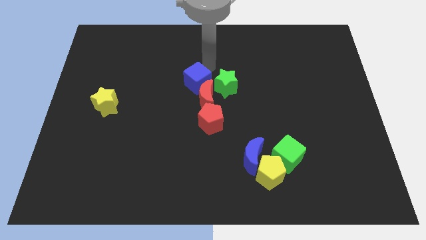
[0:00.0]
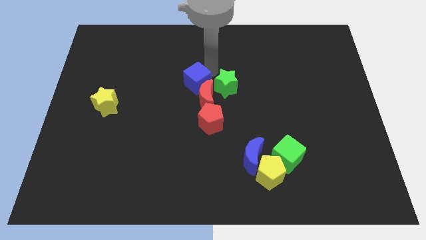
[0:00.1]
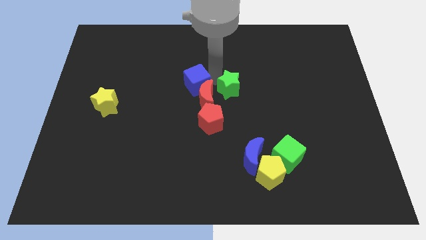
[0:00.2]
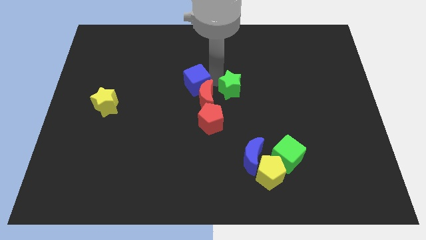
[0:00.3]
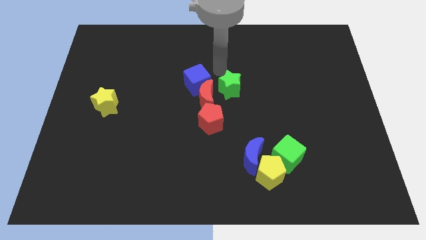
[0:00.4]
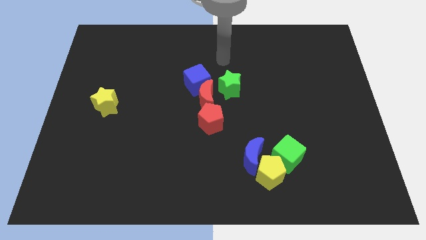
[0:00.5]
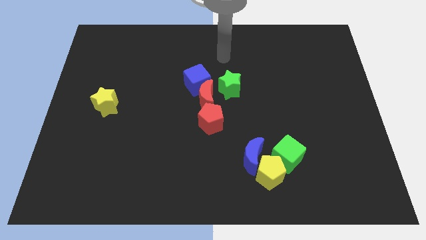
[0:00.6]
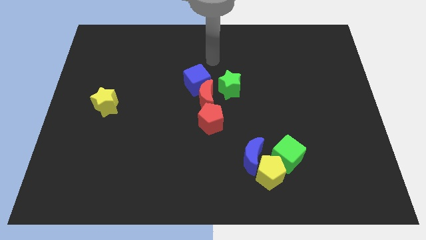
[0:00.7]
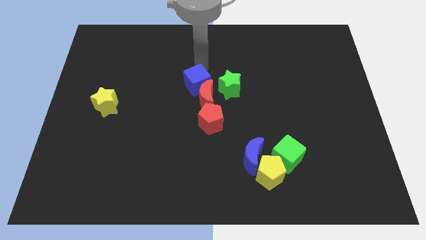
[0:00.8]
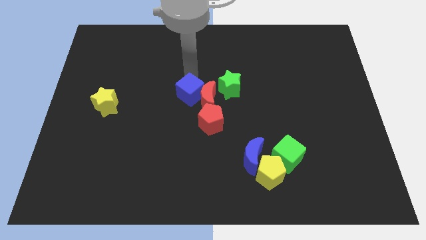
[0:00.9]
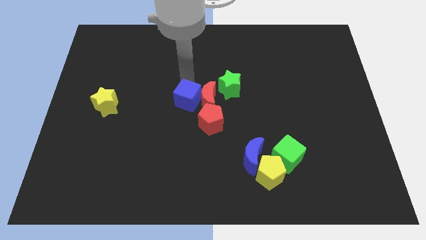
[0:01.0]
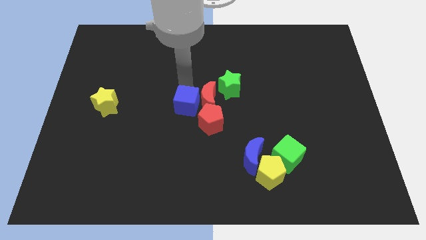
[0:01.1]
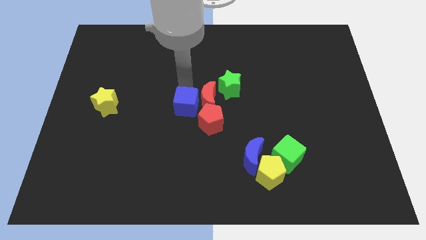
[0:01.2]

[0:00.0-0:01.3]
place the blue cube to the left side of the red crescent

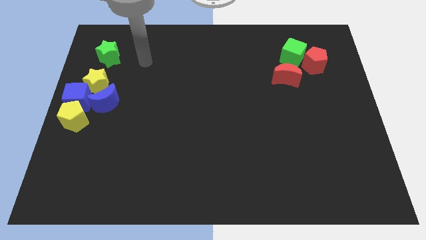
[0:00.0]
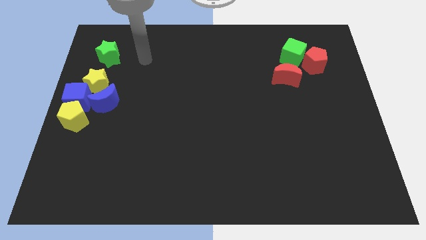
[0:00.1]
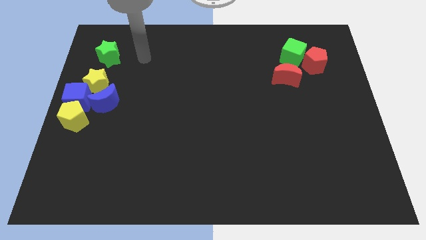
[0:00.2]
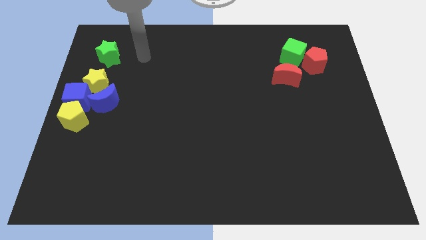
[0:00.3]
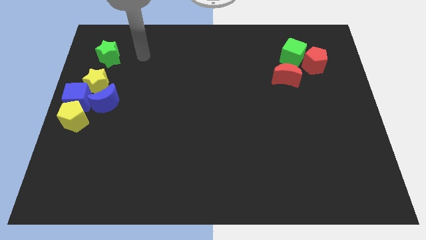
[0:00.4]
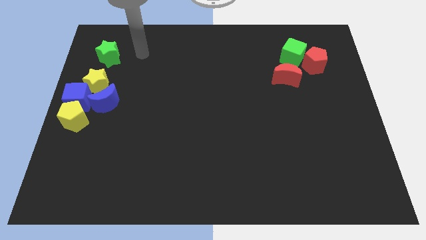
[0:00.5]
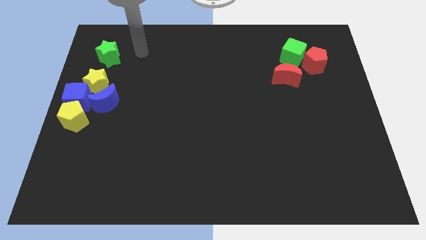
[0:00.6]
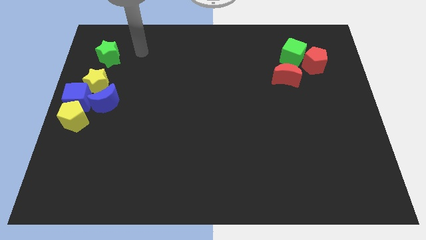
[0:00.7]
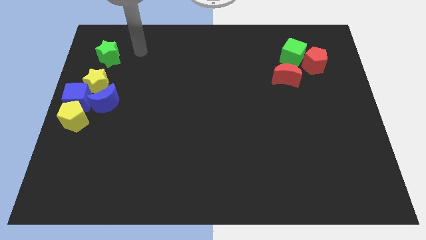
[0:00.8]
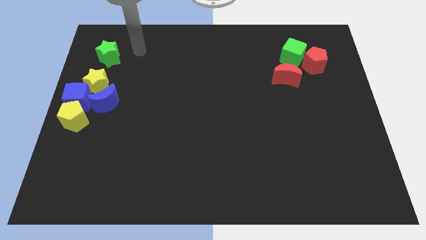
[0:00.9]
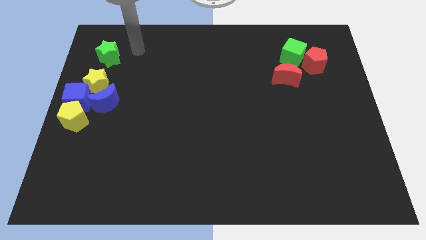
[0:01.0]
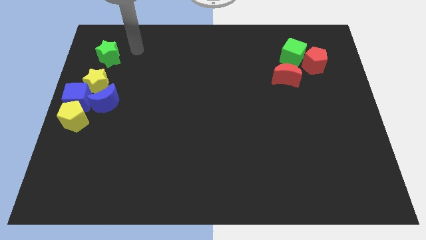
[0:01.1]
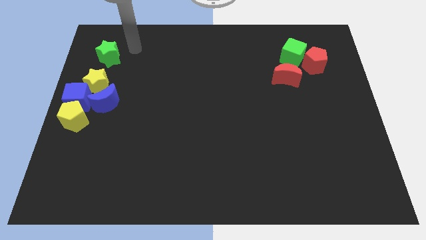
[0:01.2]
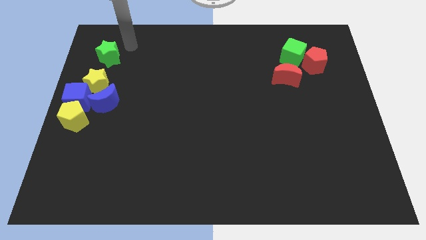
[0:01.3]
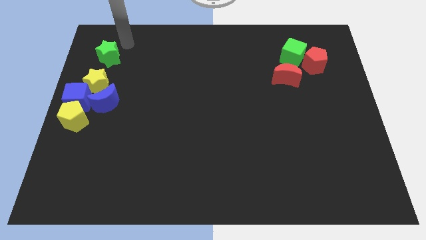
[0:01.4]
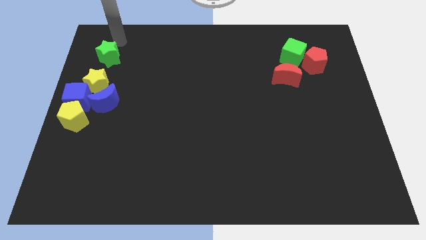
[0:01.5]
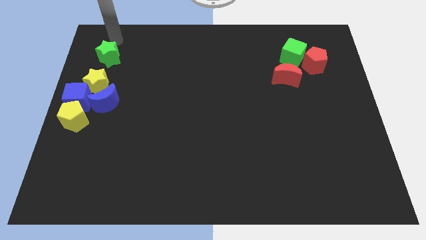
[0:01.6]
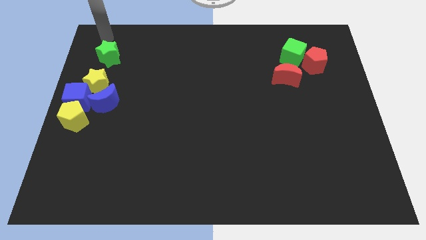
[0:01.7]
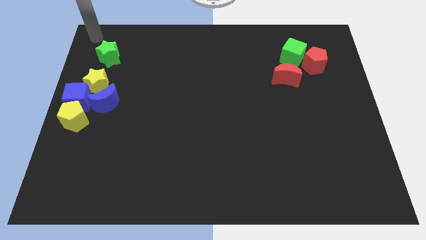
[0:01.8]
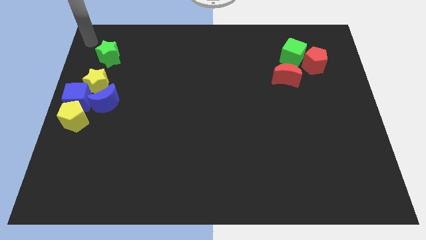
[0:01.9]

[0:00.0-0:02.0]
move the arm to the top of the green star

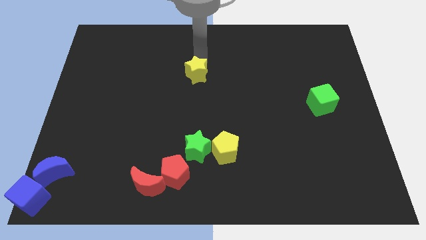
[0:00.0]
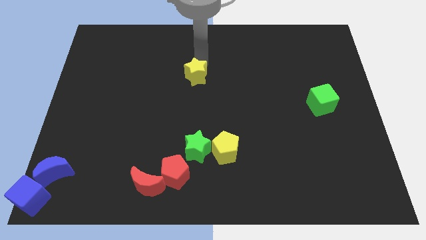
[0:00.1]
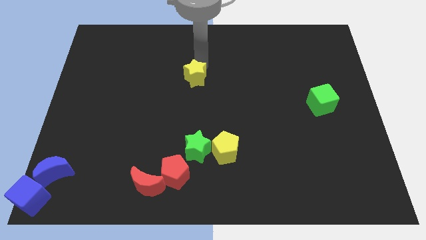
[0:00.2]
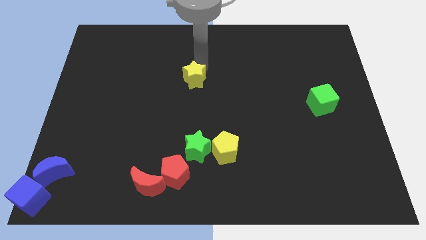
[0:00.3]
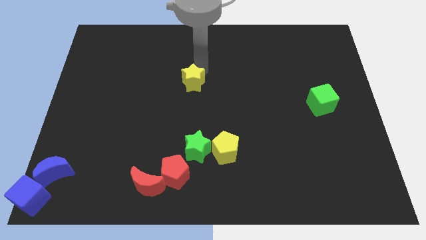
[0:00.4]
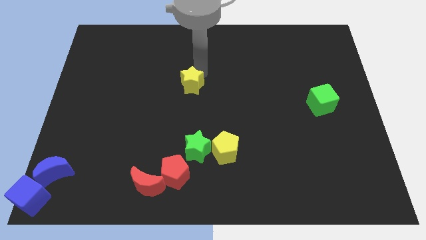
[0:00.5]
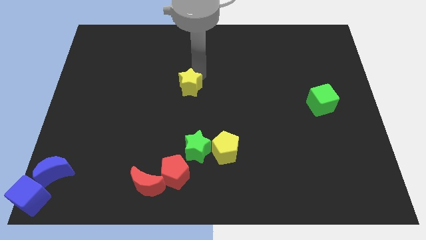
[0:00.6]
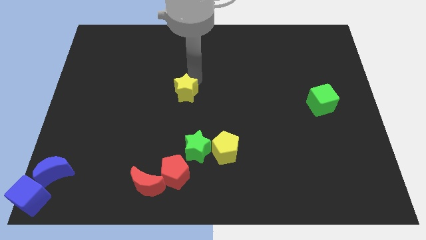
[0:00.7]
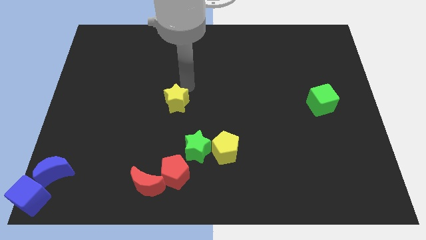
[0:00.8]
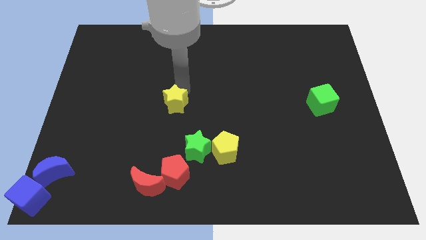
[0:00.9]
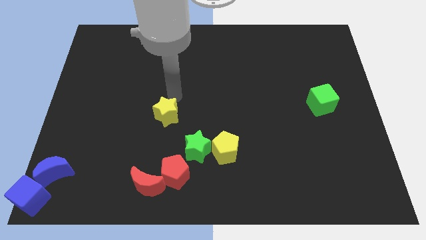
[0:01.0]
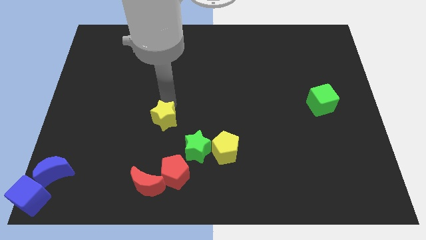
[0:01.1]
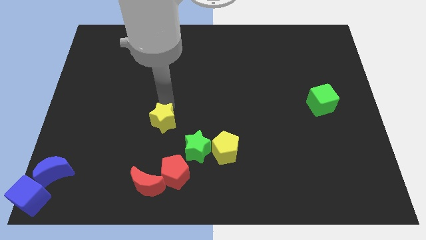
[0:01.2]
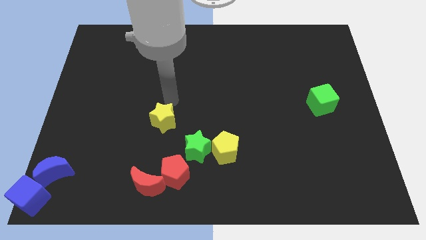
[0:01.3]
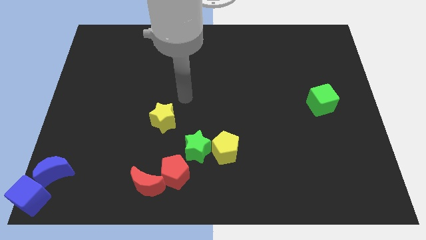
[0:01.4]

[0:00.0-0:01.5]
slide the yellow star diagonally top left to the green star

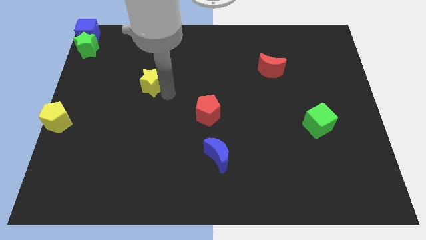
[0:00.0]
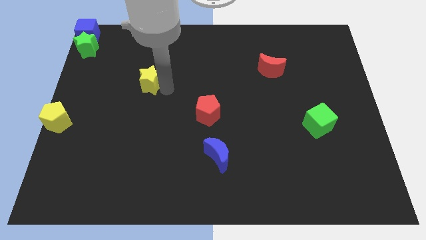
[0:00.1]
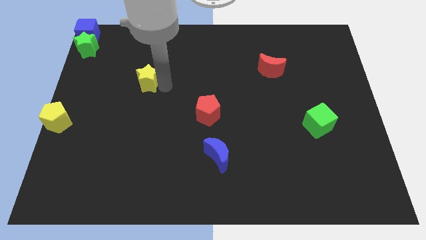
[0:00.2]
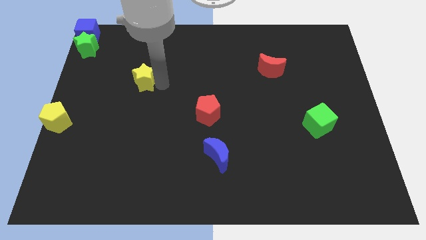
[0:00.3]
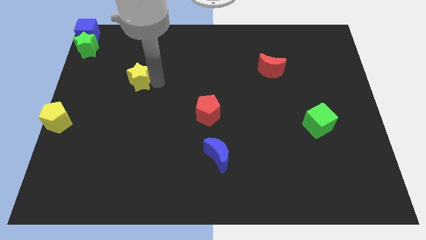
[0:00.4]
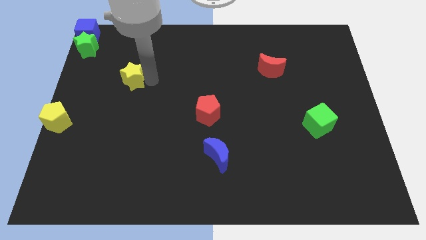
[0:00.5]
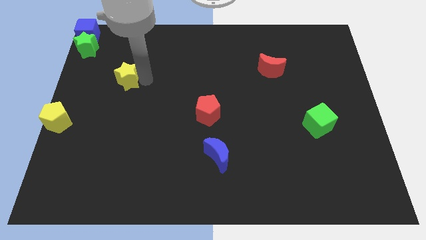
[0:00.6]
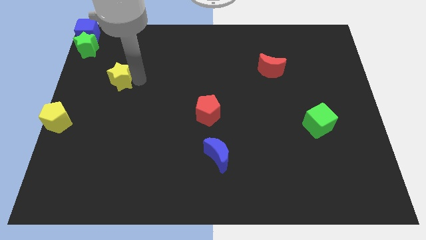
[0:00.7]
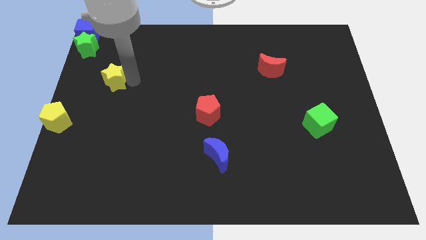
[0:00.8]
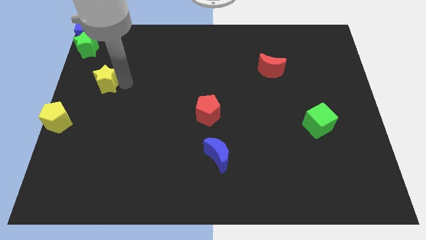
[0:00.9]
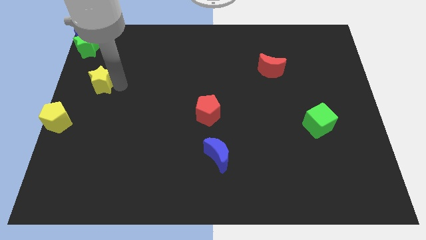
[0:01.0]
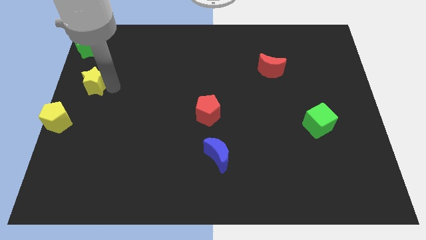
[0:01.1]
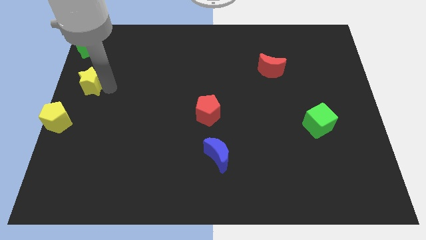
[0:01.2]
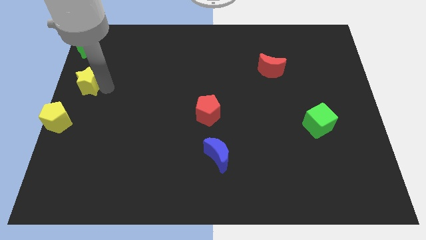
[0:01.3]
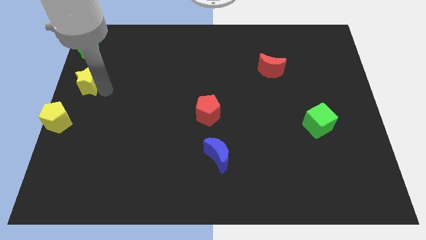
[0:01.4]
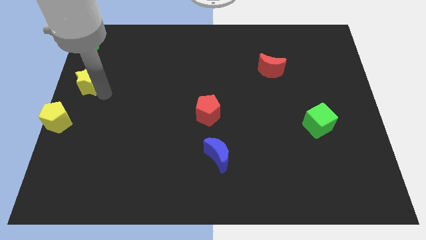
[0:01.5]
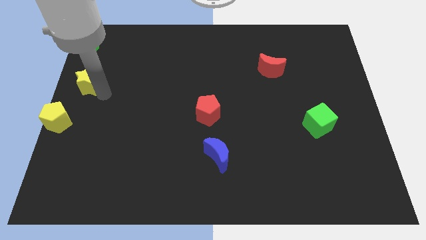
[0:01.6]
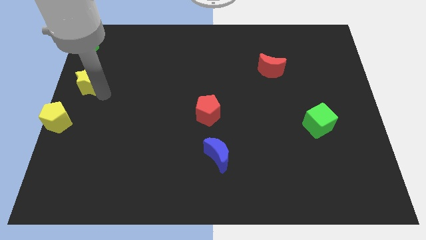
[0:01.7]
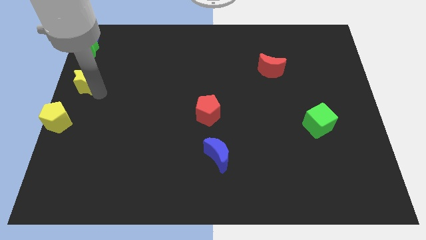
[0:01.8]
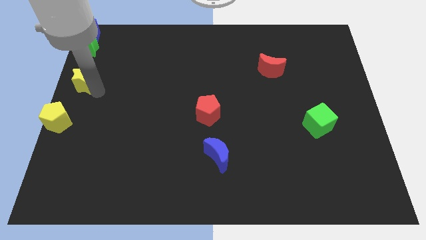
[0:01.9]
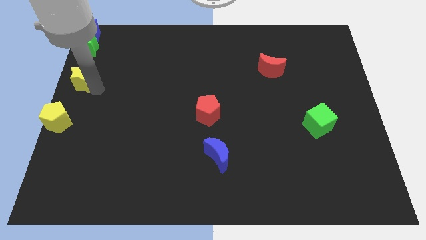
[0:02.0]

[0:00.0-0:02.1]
place the yellow star below the green star

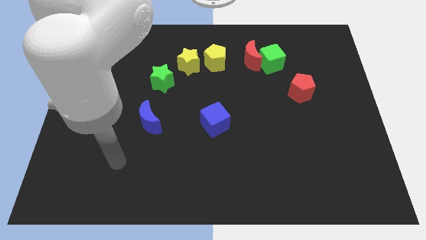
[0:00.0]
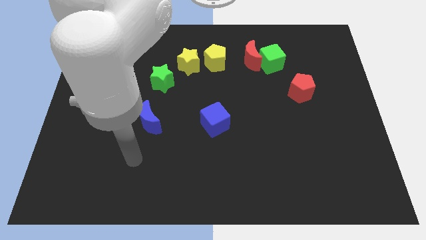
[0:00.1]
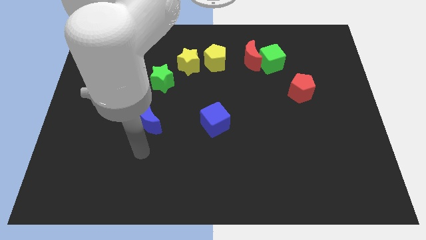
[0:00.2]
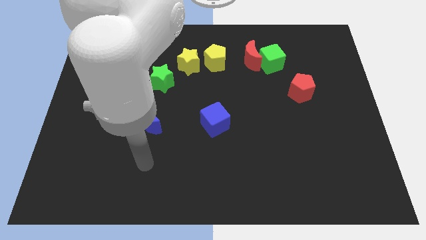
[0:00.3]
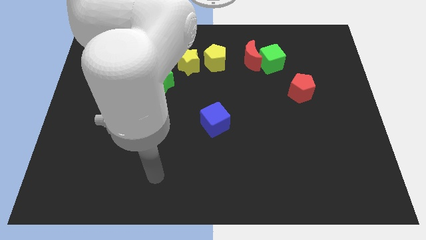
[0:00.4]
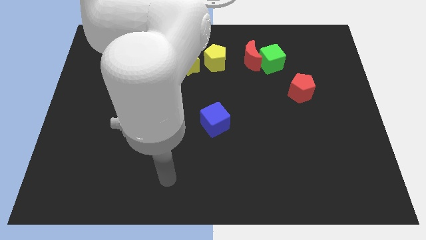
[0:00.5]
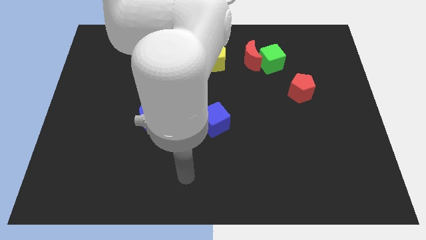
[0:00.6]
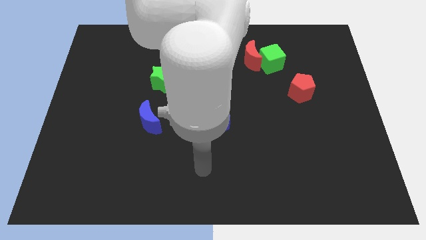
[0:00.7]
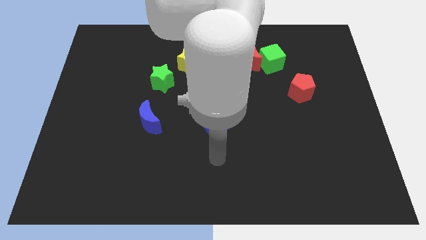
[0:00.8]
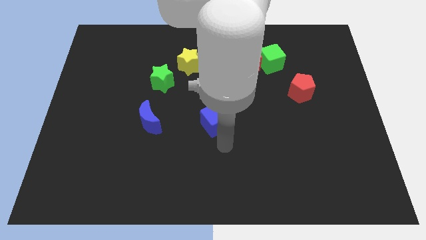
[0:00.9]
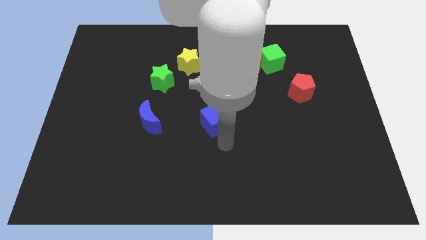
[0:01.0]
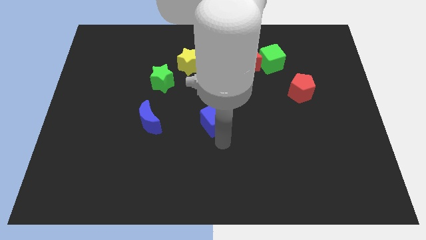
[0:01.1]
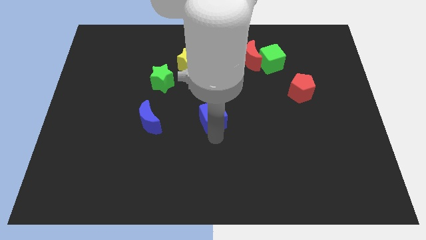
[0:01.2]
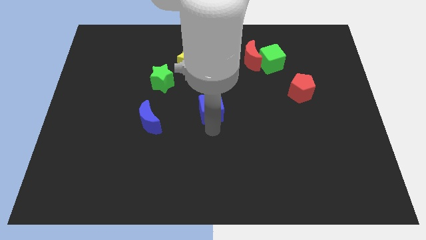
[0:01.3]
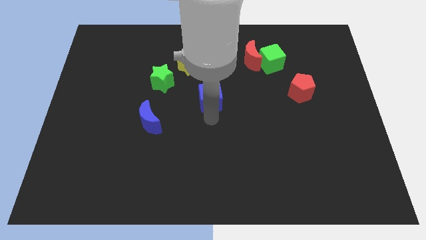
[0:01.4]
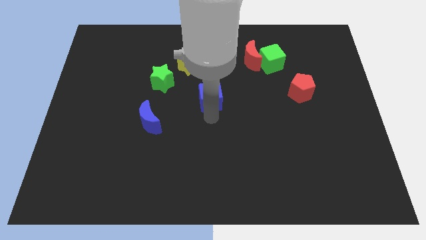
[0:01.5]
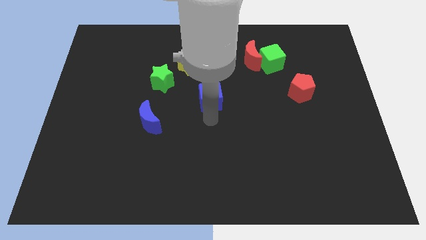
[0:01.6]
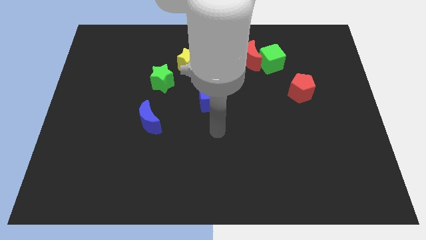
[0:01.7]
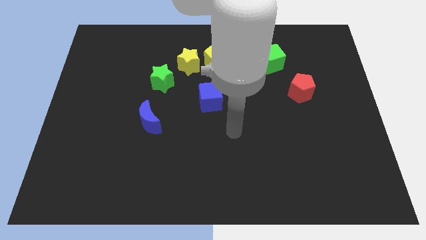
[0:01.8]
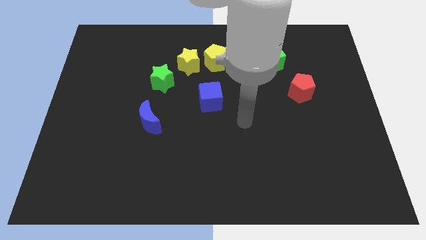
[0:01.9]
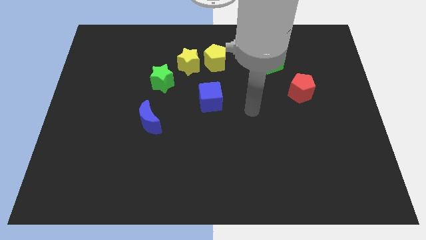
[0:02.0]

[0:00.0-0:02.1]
slide blue cube slightly upwards
